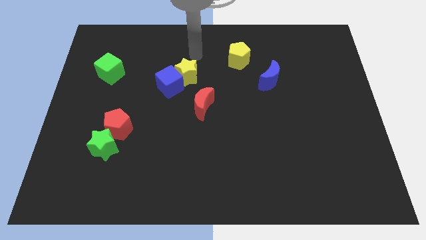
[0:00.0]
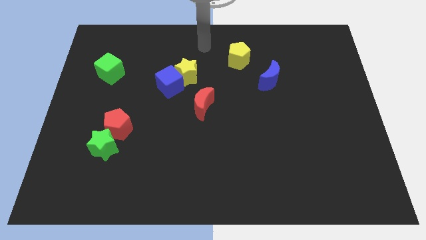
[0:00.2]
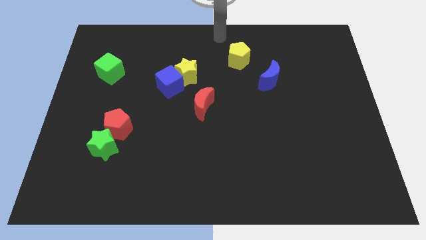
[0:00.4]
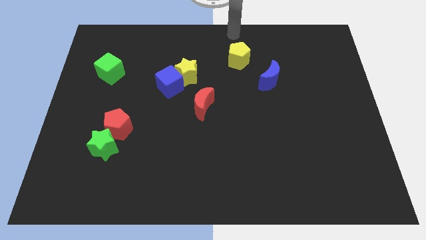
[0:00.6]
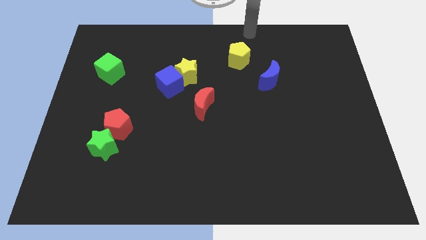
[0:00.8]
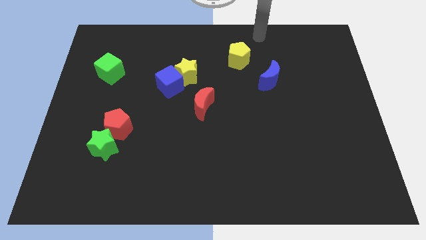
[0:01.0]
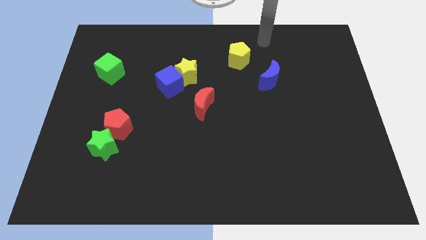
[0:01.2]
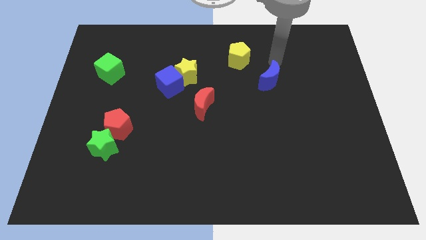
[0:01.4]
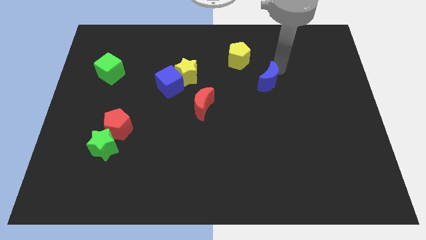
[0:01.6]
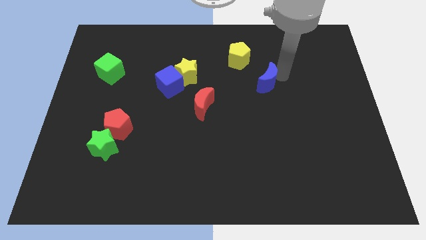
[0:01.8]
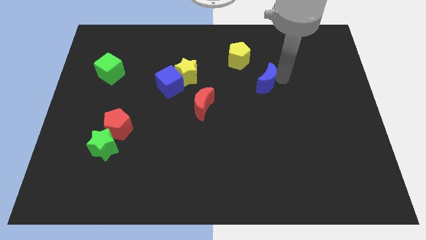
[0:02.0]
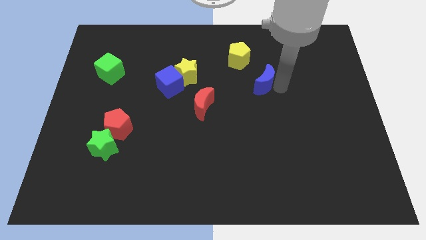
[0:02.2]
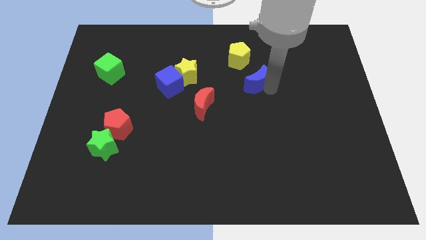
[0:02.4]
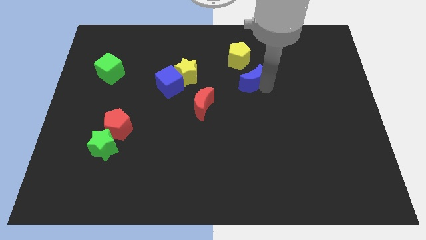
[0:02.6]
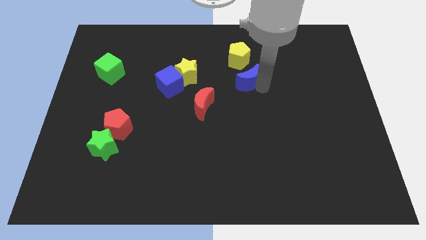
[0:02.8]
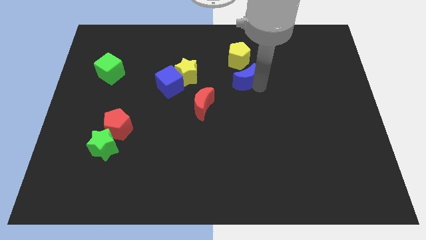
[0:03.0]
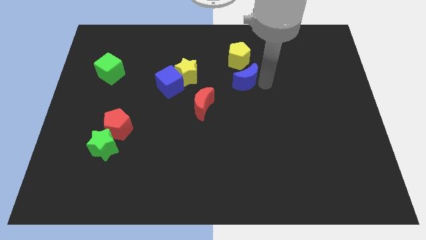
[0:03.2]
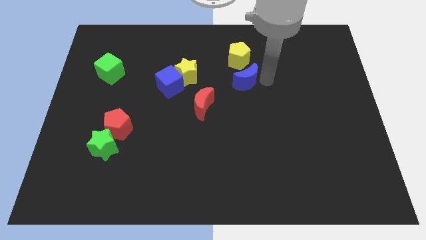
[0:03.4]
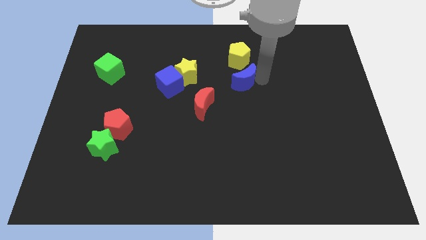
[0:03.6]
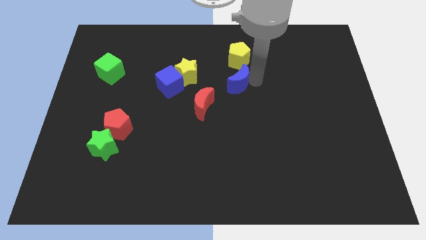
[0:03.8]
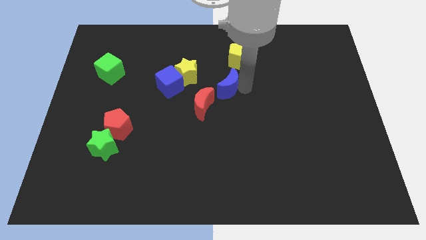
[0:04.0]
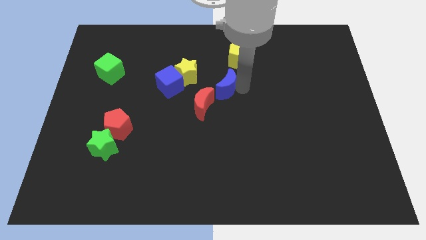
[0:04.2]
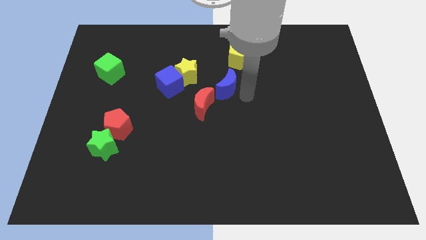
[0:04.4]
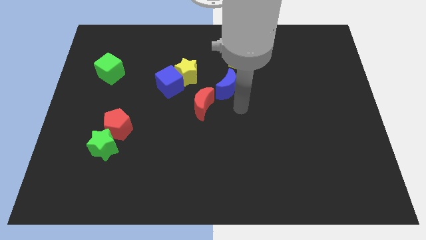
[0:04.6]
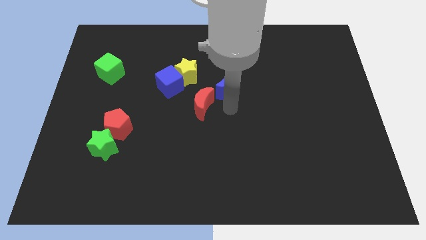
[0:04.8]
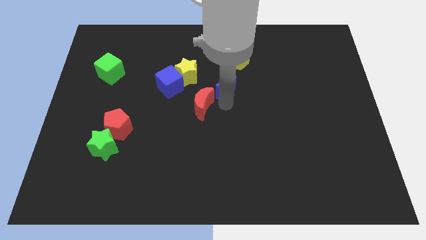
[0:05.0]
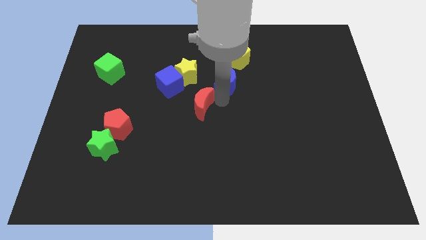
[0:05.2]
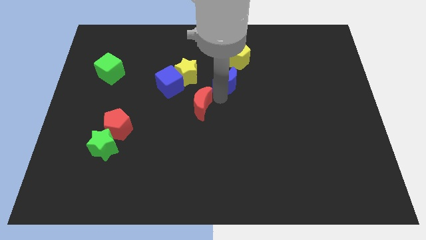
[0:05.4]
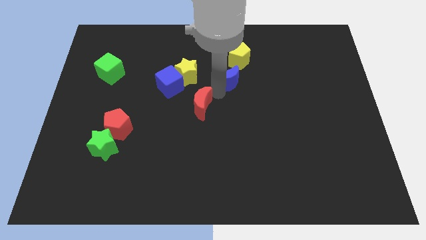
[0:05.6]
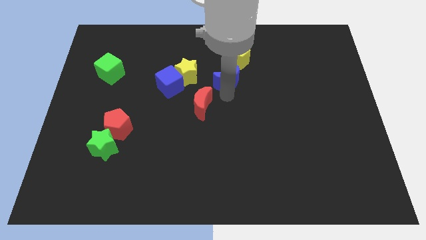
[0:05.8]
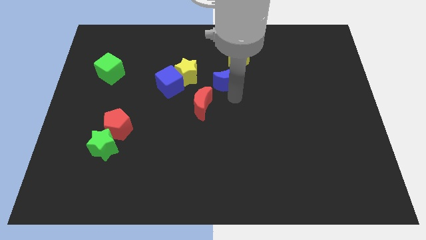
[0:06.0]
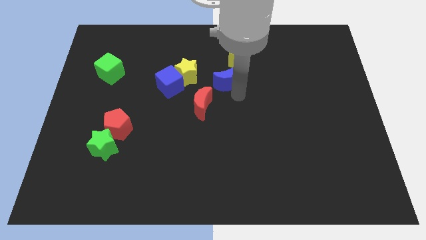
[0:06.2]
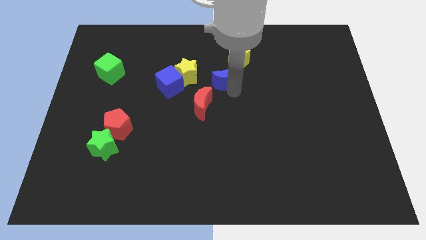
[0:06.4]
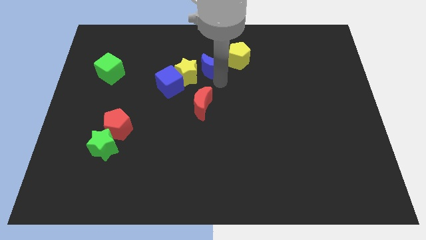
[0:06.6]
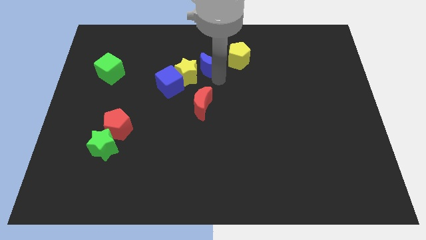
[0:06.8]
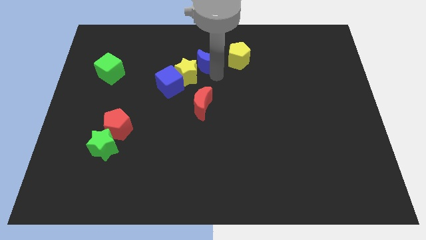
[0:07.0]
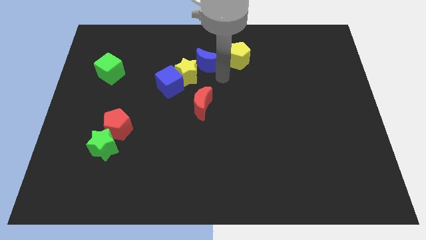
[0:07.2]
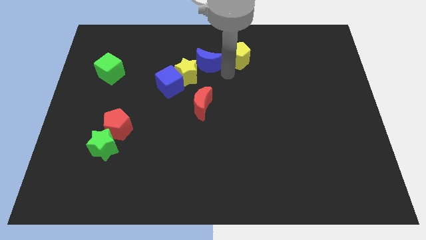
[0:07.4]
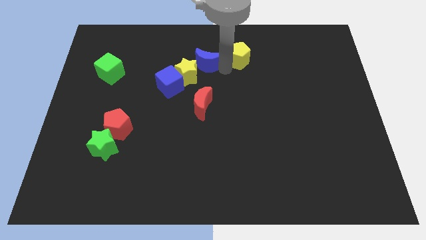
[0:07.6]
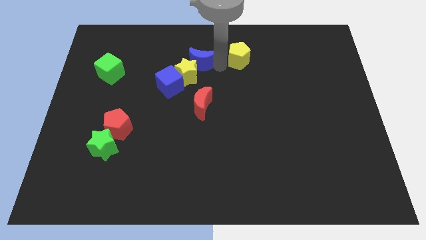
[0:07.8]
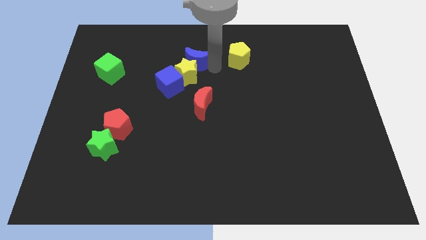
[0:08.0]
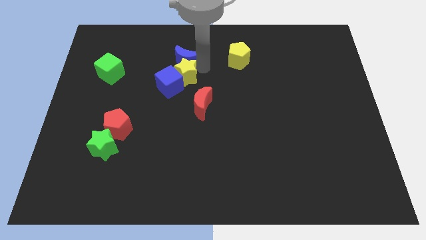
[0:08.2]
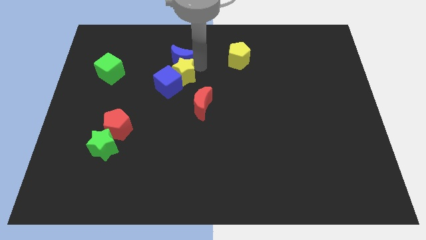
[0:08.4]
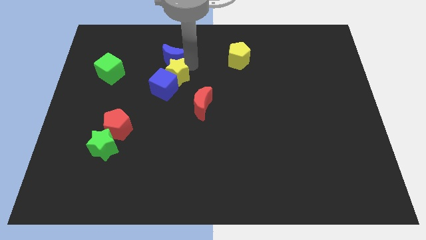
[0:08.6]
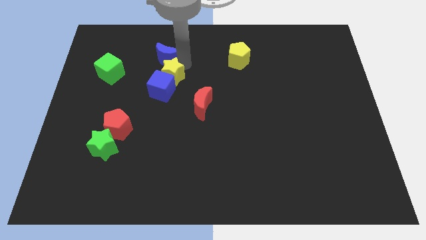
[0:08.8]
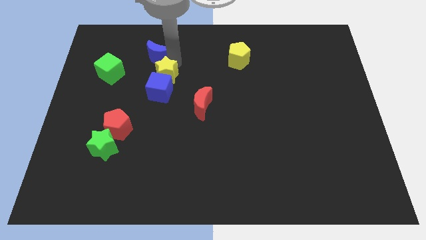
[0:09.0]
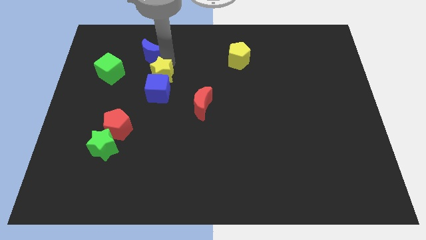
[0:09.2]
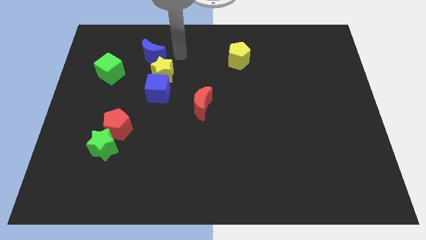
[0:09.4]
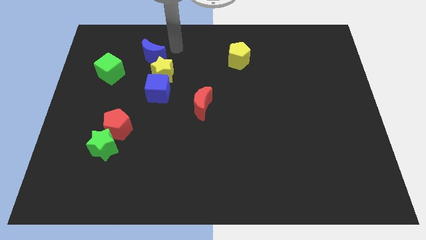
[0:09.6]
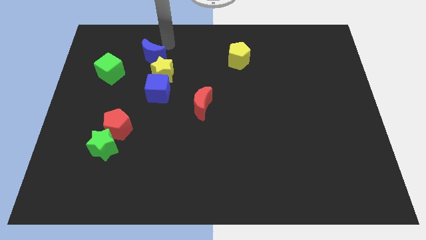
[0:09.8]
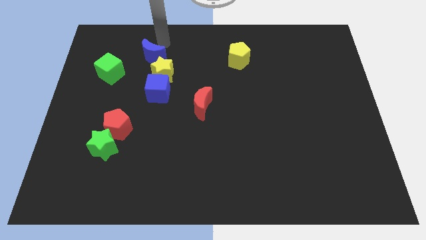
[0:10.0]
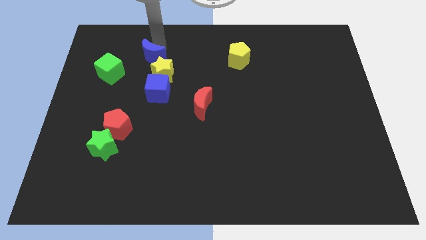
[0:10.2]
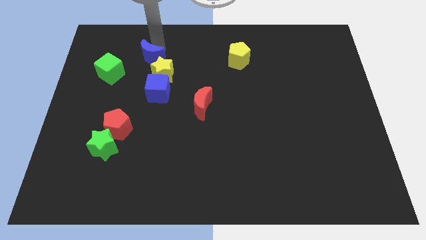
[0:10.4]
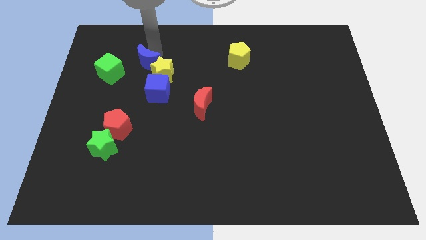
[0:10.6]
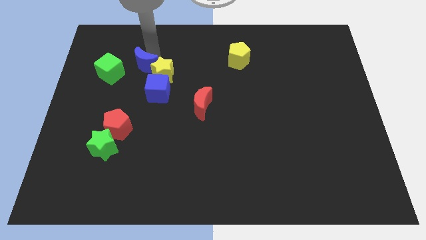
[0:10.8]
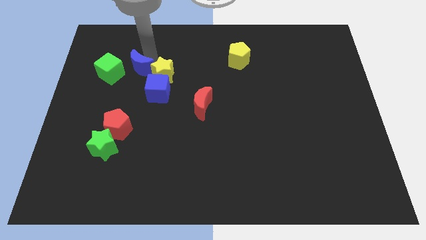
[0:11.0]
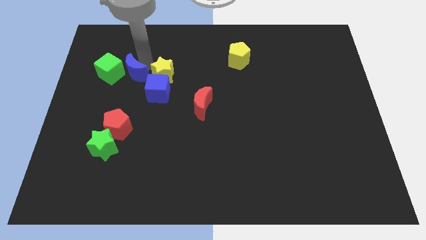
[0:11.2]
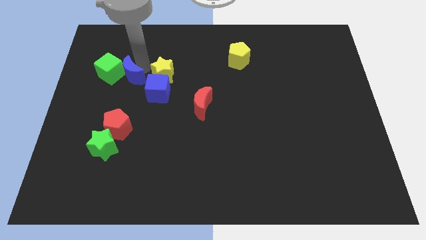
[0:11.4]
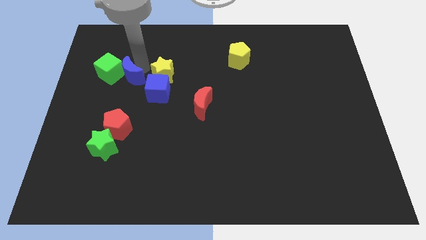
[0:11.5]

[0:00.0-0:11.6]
put the blue moon towards the green cube

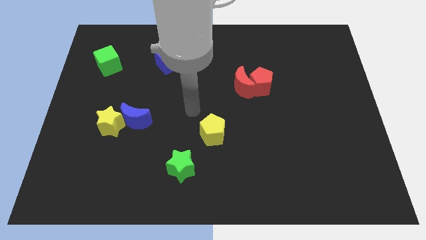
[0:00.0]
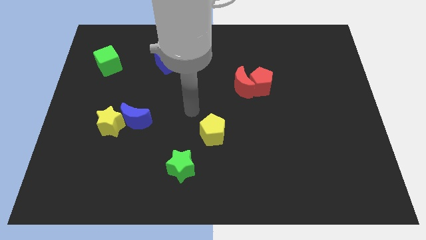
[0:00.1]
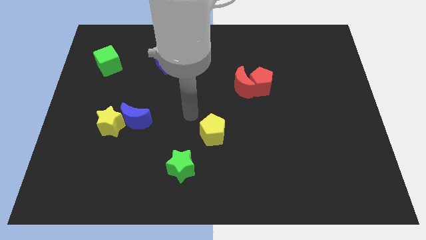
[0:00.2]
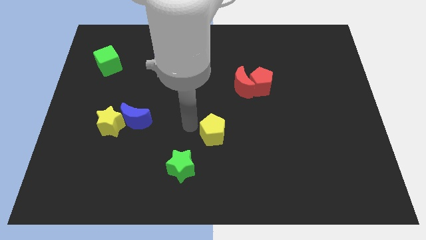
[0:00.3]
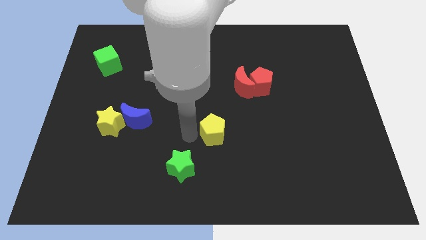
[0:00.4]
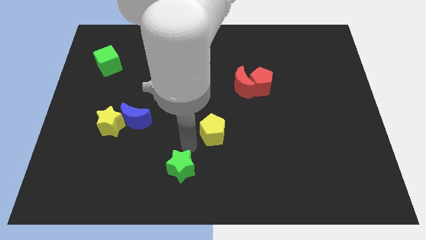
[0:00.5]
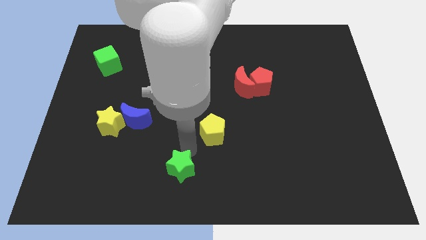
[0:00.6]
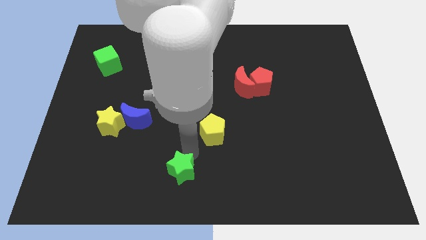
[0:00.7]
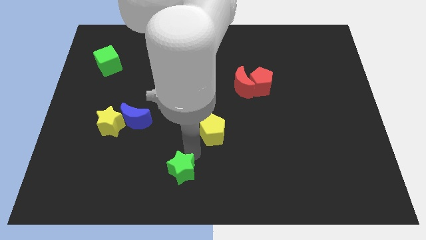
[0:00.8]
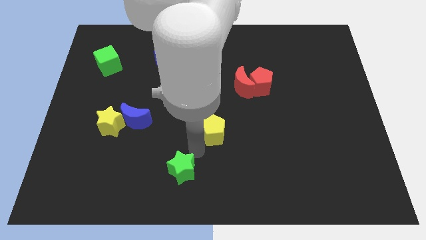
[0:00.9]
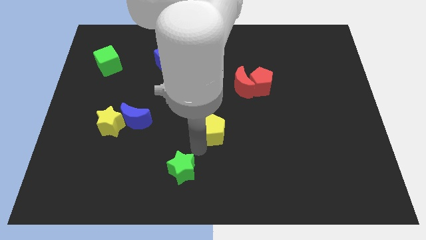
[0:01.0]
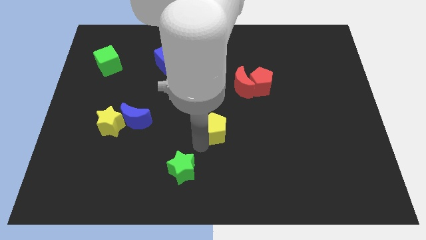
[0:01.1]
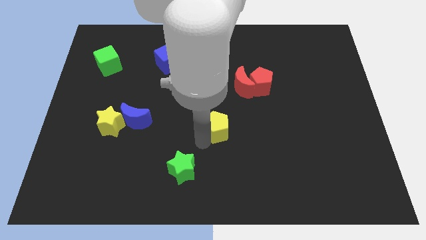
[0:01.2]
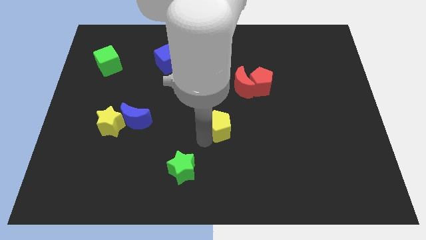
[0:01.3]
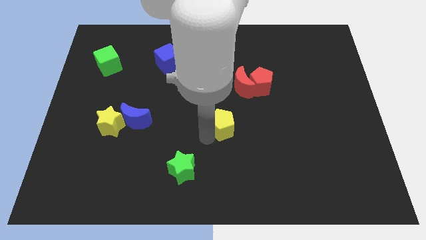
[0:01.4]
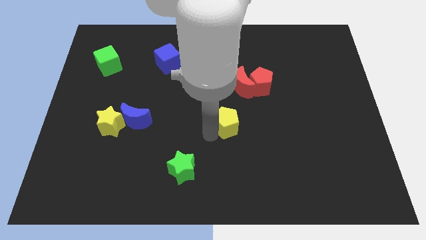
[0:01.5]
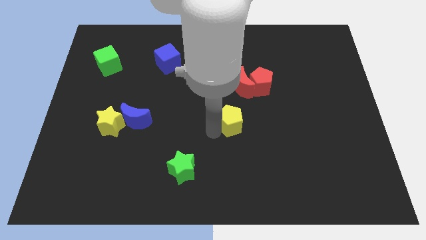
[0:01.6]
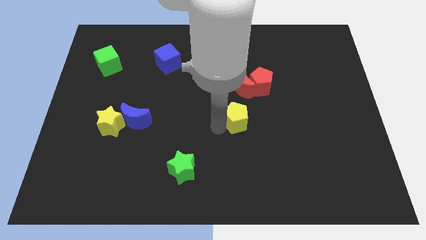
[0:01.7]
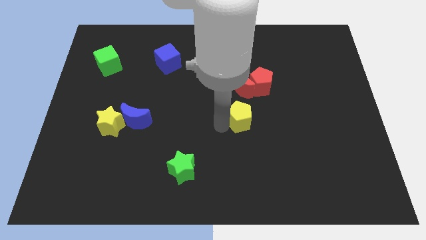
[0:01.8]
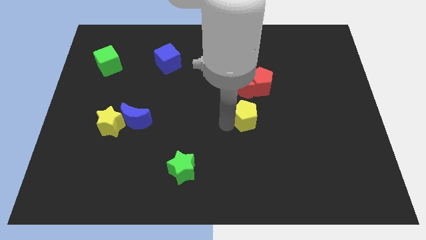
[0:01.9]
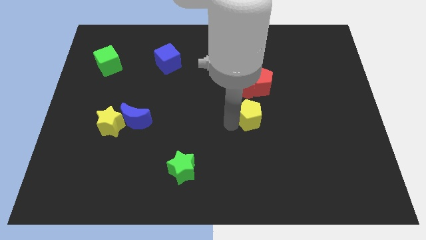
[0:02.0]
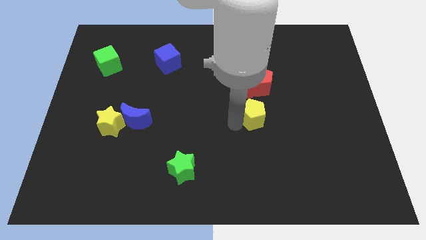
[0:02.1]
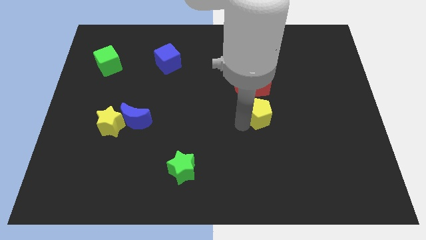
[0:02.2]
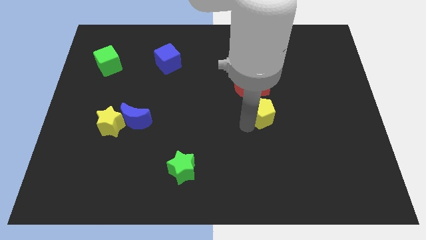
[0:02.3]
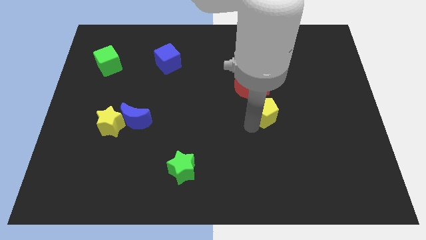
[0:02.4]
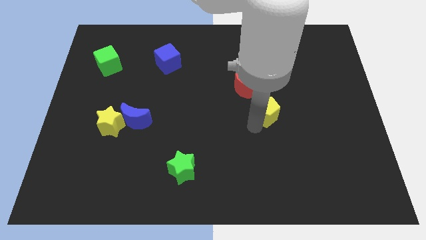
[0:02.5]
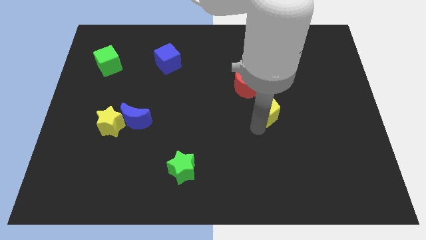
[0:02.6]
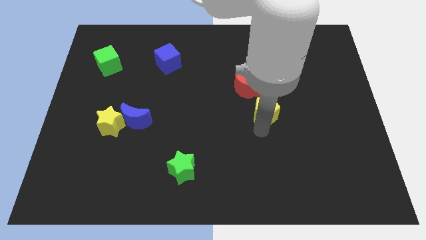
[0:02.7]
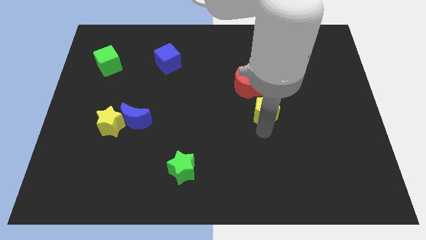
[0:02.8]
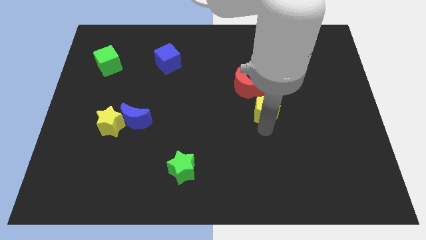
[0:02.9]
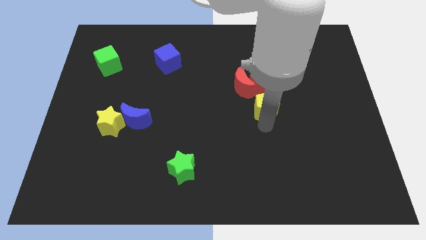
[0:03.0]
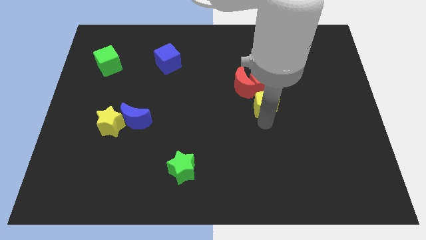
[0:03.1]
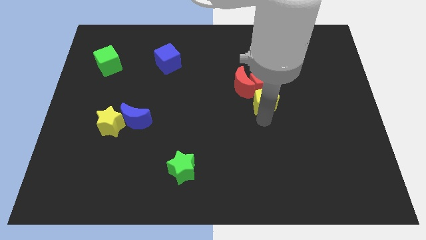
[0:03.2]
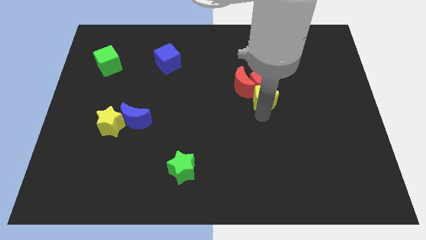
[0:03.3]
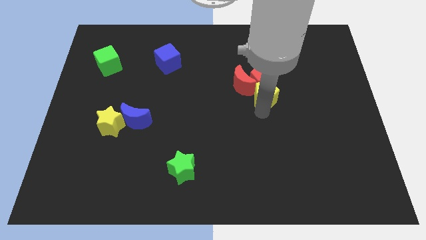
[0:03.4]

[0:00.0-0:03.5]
move the yellow pentagon next to the red pentagon
